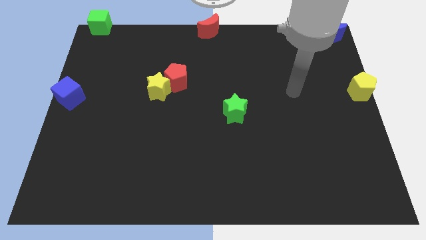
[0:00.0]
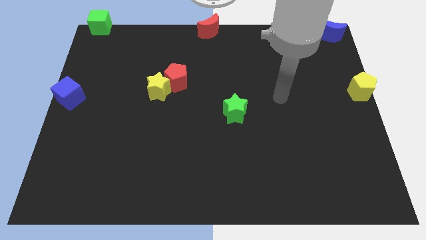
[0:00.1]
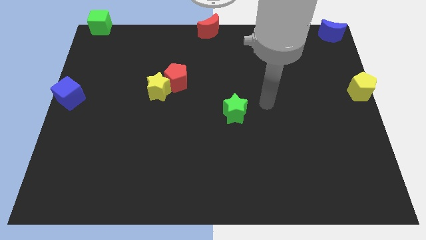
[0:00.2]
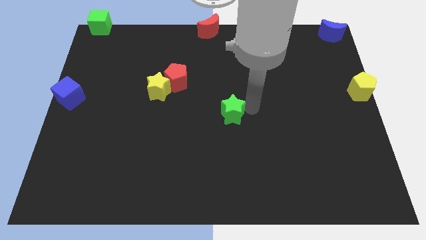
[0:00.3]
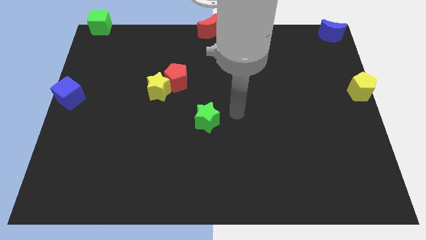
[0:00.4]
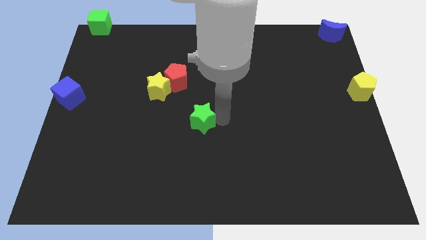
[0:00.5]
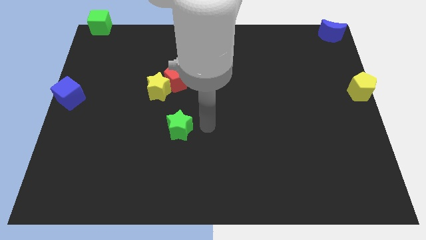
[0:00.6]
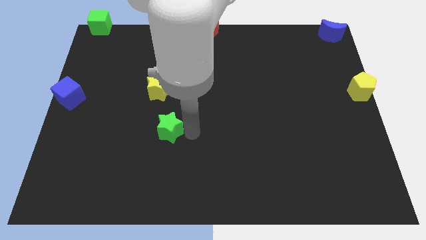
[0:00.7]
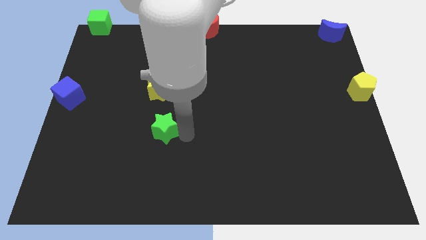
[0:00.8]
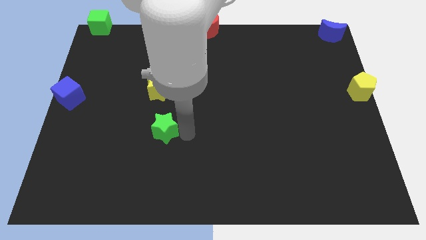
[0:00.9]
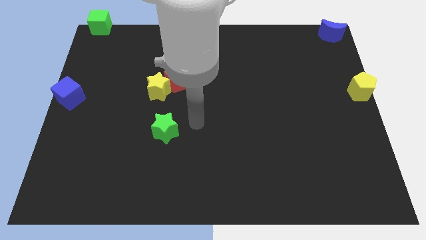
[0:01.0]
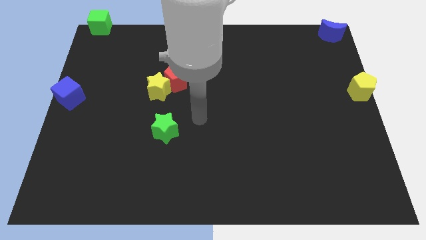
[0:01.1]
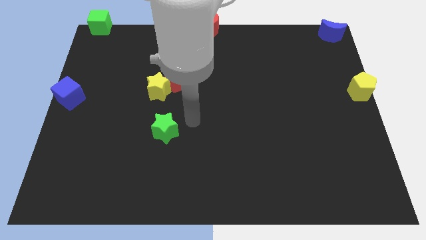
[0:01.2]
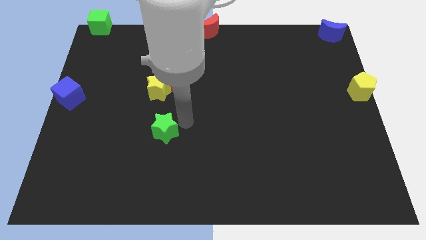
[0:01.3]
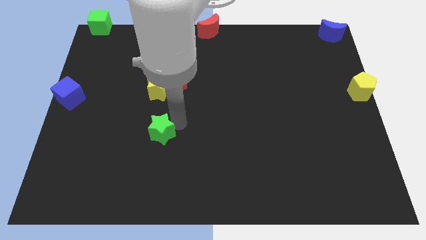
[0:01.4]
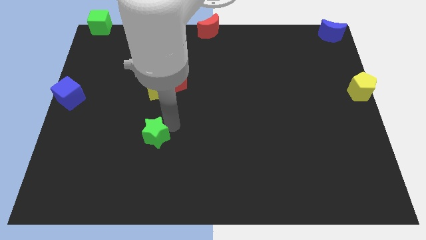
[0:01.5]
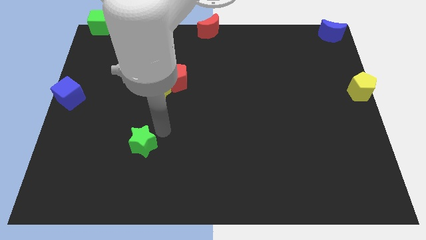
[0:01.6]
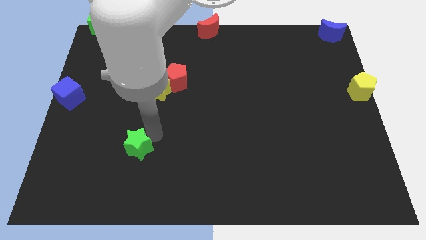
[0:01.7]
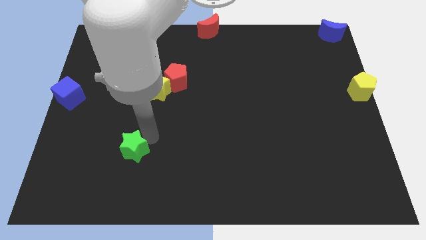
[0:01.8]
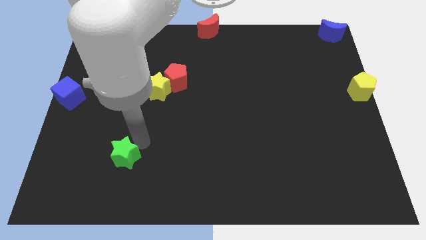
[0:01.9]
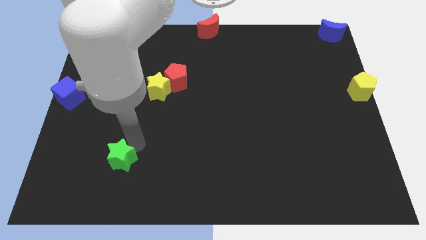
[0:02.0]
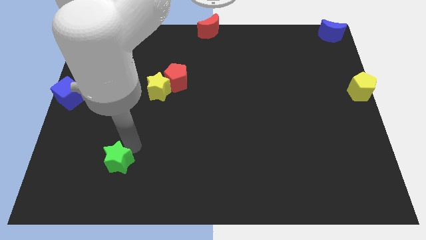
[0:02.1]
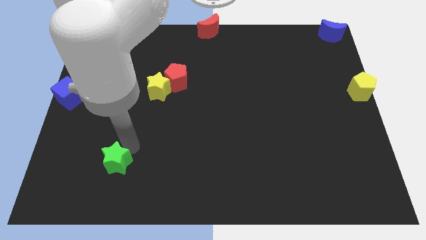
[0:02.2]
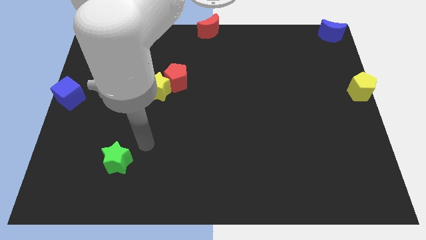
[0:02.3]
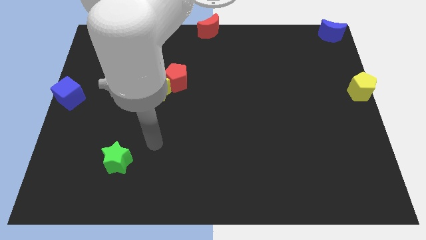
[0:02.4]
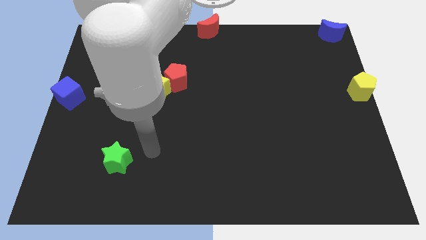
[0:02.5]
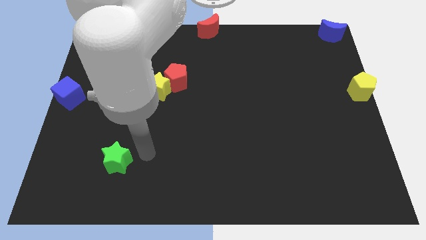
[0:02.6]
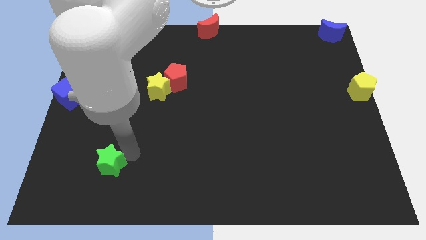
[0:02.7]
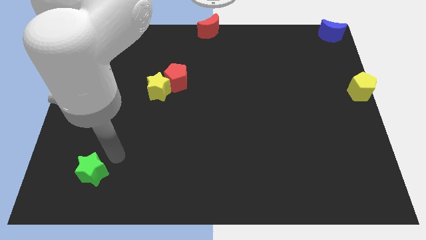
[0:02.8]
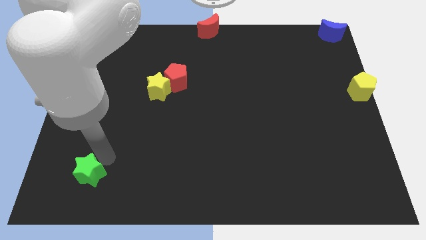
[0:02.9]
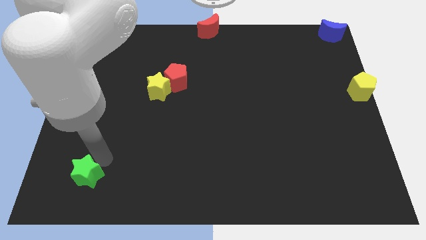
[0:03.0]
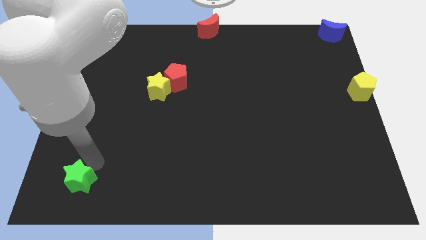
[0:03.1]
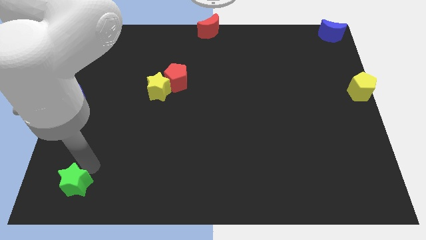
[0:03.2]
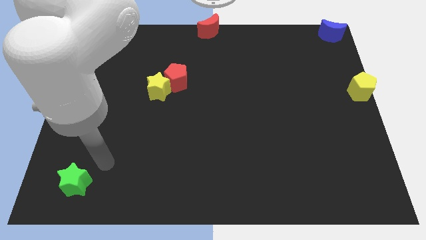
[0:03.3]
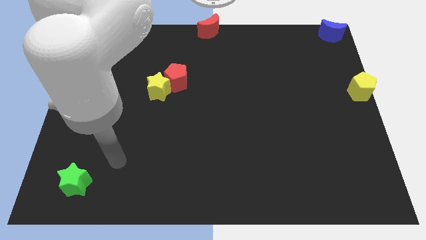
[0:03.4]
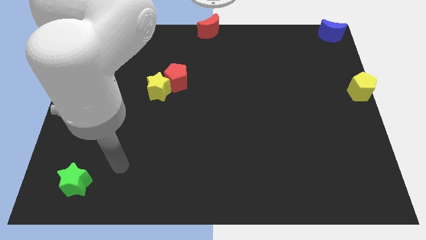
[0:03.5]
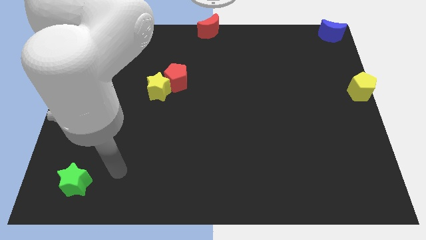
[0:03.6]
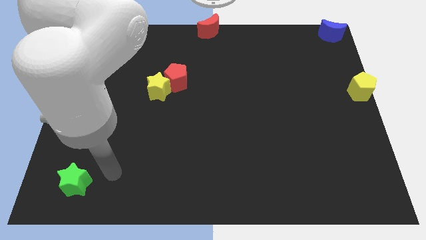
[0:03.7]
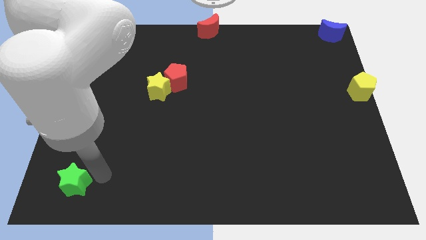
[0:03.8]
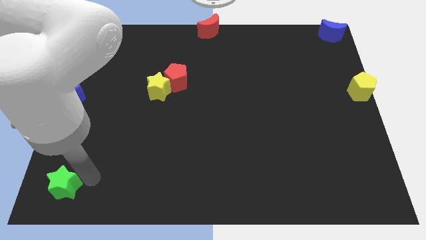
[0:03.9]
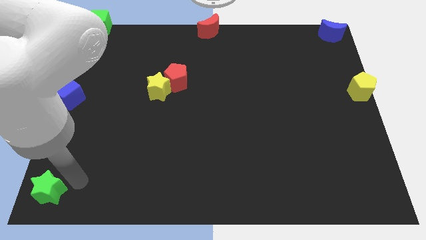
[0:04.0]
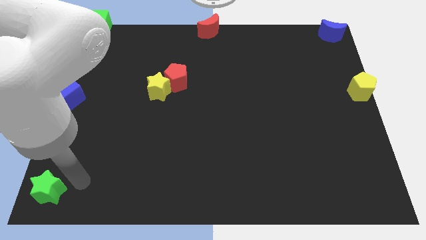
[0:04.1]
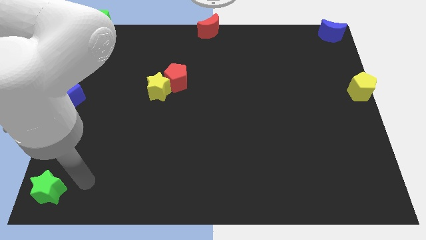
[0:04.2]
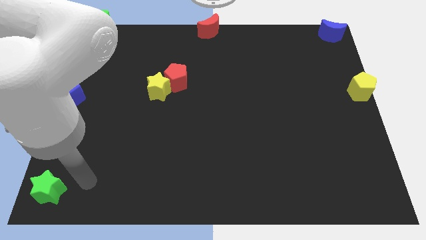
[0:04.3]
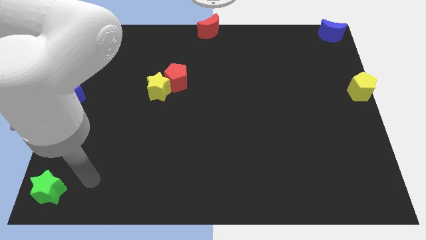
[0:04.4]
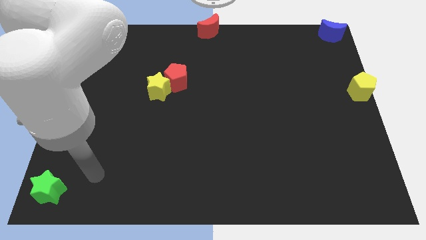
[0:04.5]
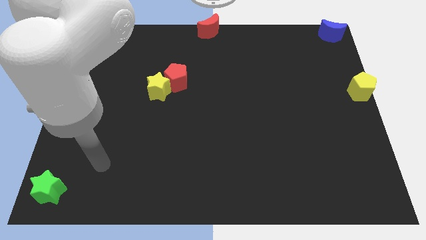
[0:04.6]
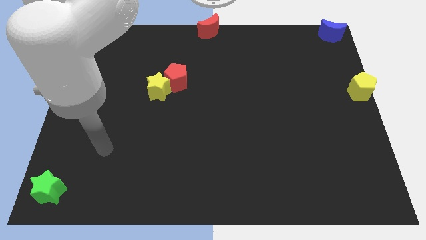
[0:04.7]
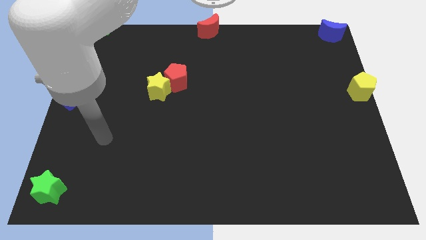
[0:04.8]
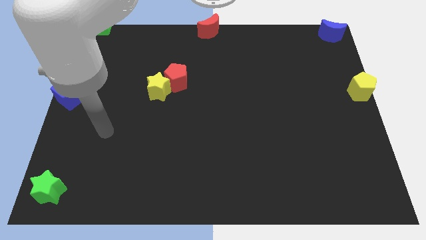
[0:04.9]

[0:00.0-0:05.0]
place the green star vertically below the blue cube

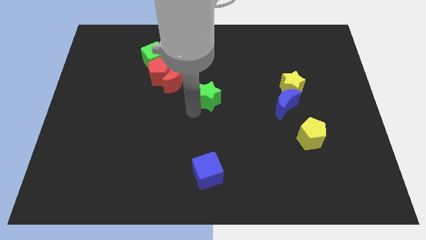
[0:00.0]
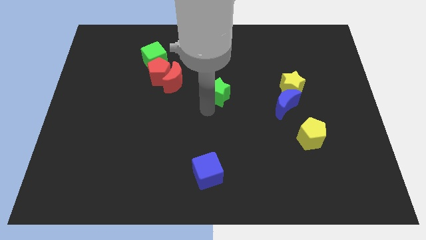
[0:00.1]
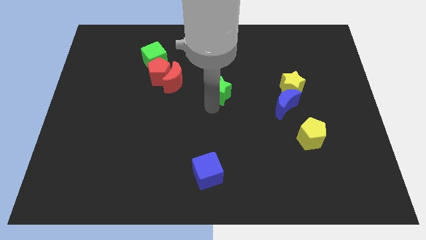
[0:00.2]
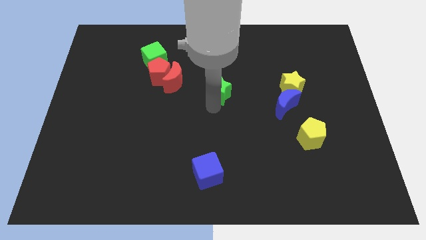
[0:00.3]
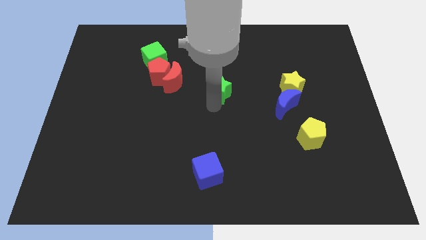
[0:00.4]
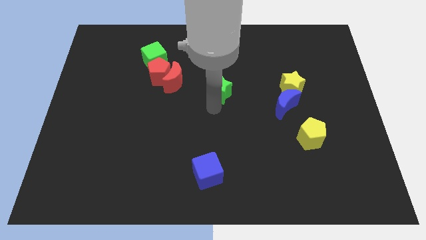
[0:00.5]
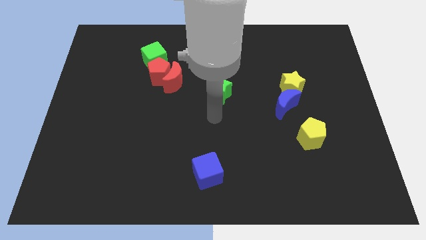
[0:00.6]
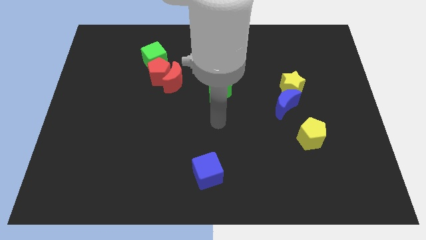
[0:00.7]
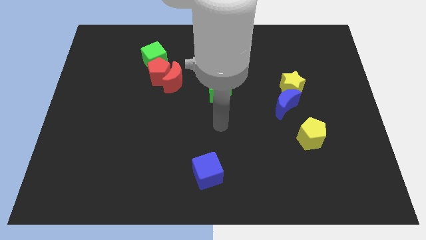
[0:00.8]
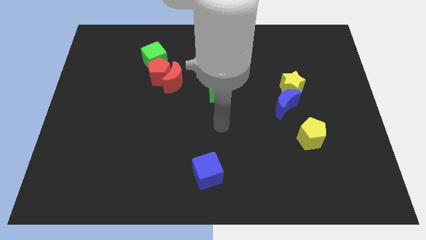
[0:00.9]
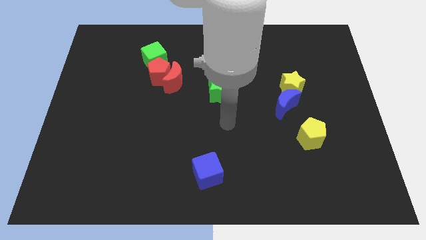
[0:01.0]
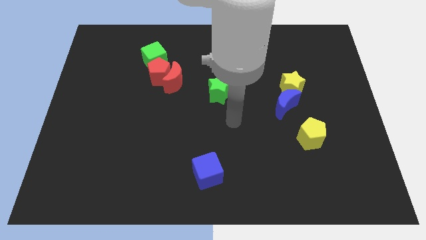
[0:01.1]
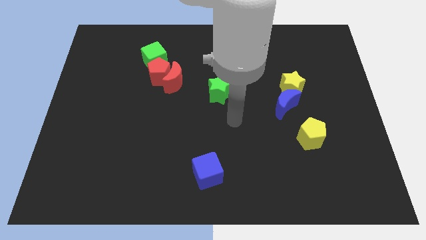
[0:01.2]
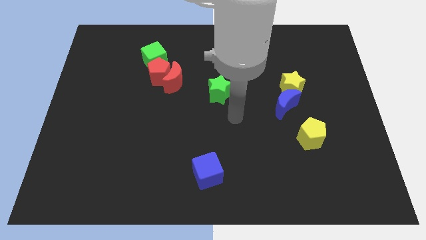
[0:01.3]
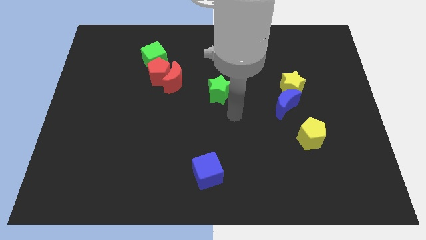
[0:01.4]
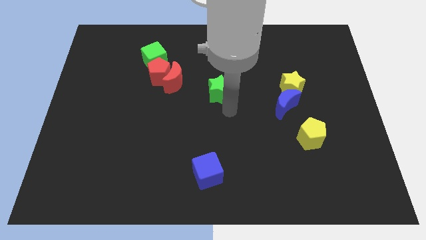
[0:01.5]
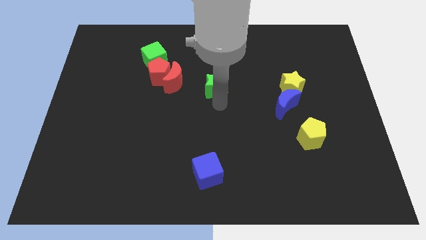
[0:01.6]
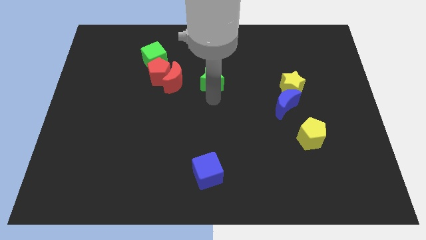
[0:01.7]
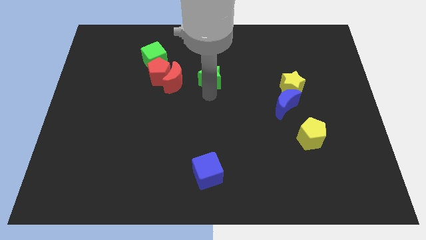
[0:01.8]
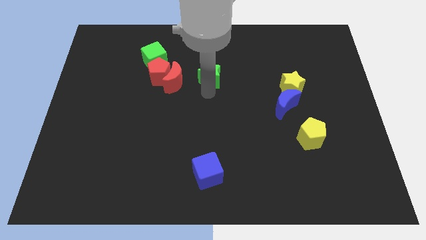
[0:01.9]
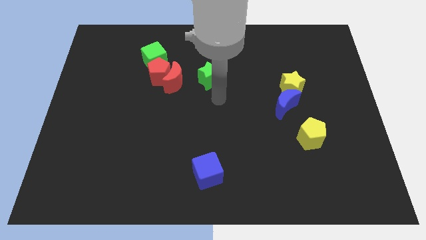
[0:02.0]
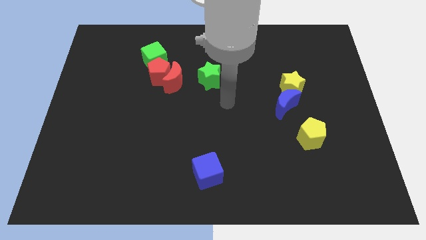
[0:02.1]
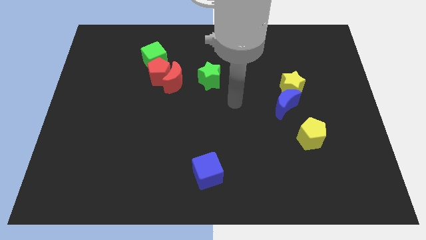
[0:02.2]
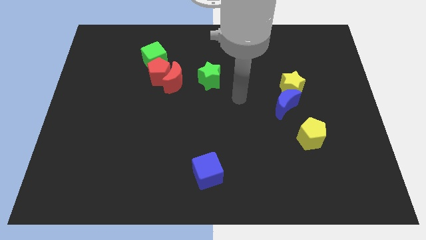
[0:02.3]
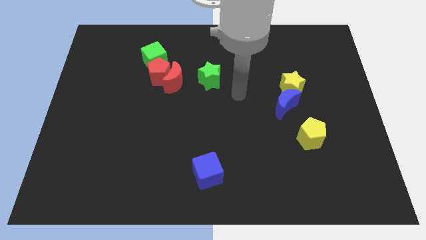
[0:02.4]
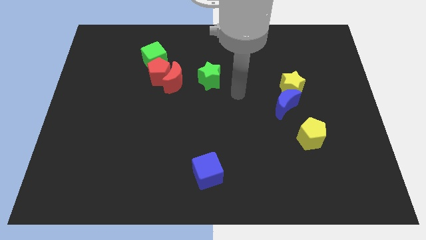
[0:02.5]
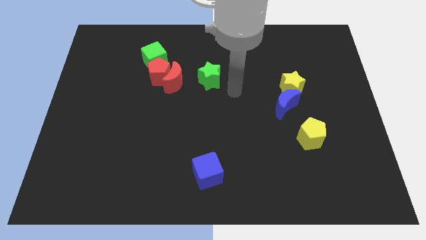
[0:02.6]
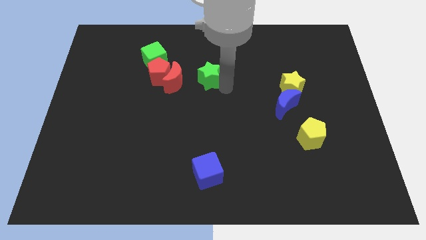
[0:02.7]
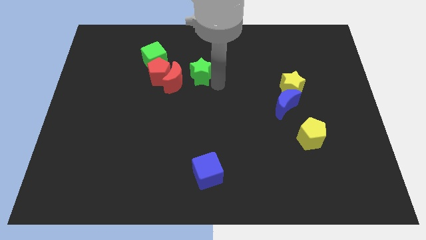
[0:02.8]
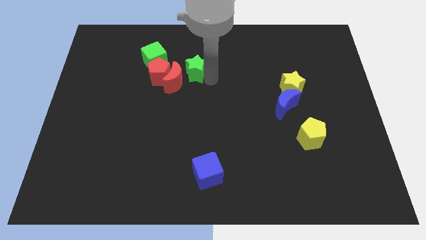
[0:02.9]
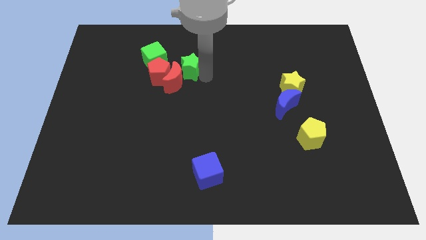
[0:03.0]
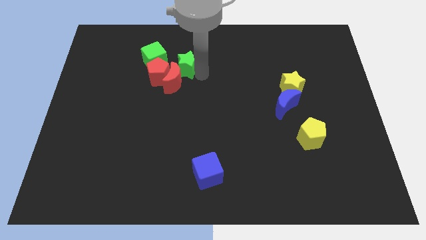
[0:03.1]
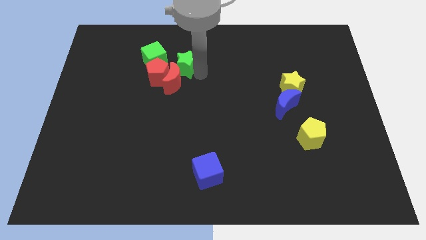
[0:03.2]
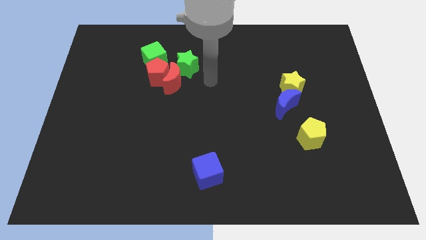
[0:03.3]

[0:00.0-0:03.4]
place the green star diagonally top right to the red pentagon

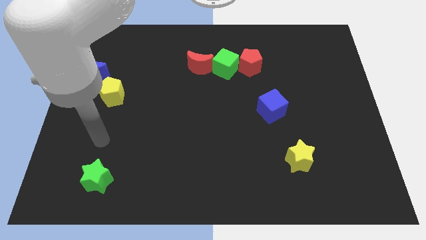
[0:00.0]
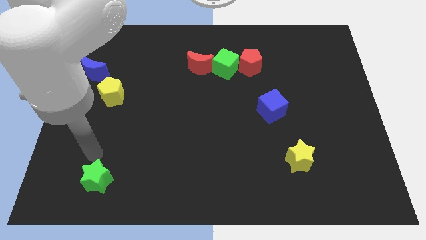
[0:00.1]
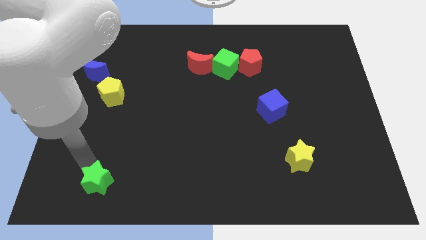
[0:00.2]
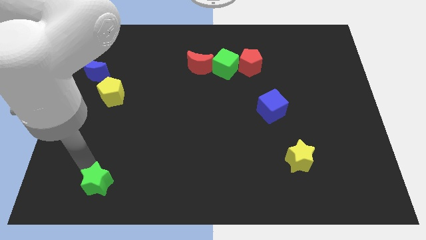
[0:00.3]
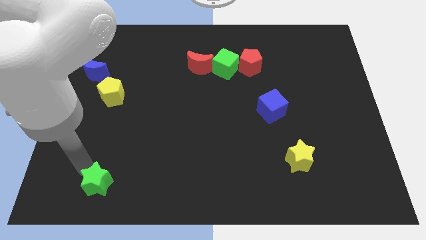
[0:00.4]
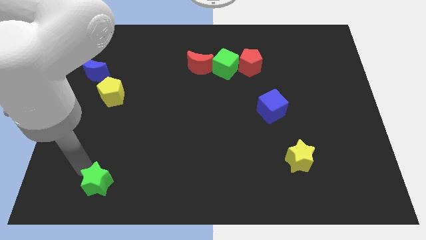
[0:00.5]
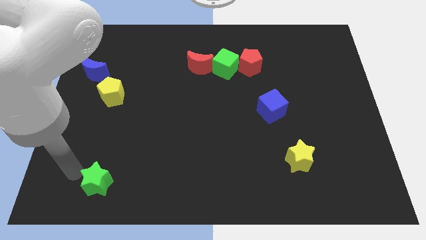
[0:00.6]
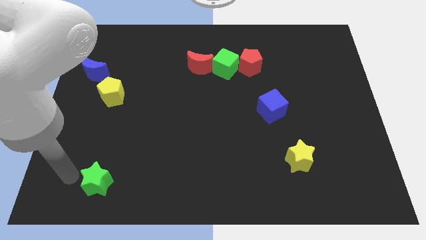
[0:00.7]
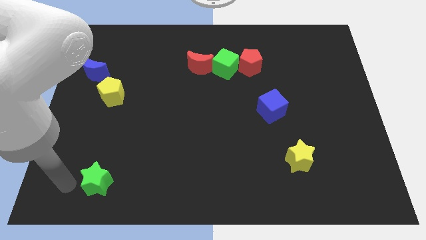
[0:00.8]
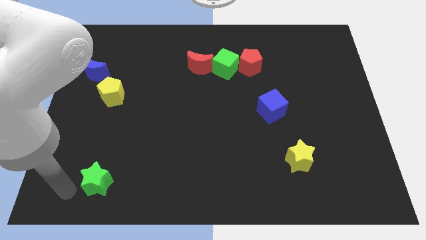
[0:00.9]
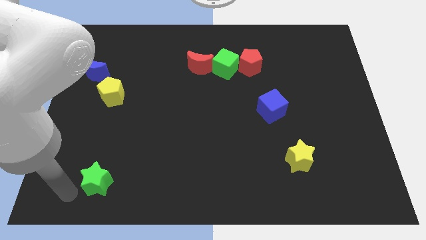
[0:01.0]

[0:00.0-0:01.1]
touch the top side of the green star
